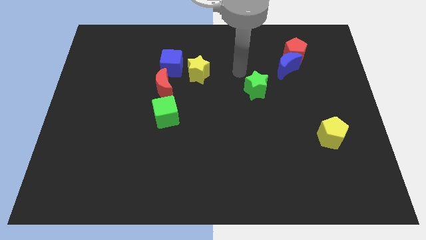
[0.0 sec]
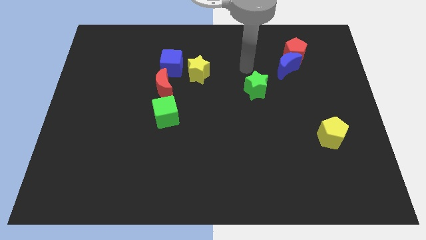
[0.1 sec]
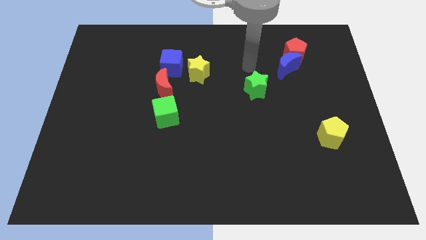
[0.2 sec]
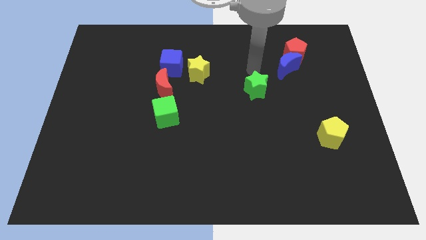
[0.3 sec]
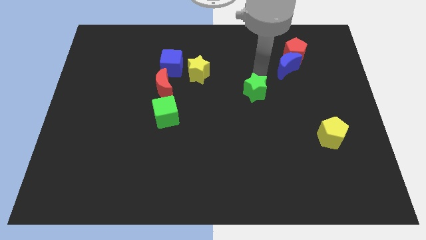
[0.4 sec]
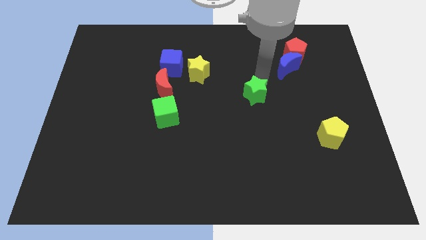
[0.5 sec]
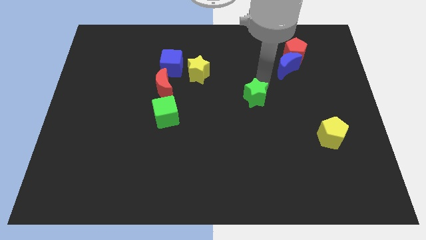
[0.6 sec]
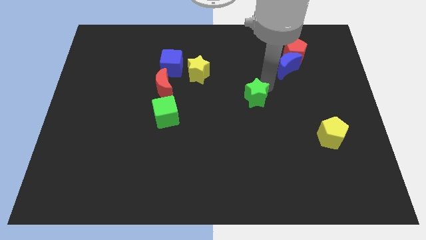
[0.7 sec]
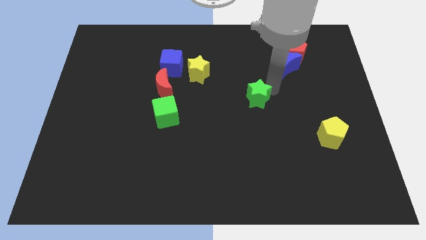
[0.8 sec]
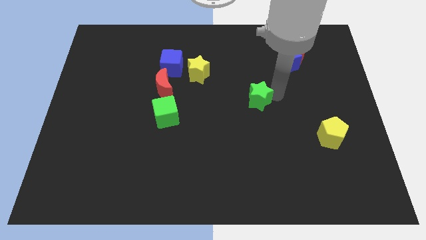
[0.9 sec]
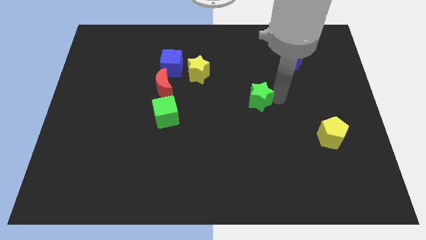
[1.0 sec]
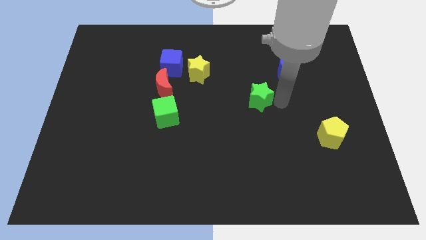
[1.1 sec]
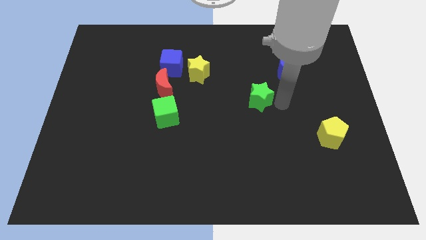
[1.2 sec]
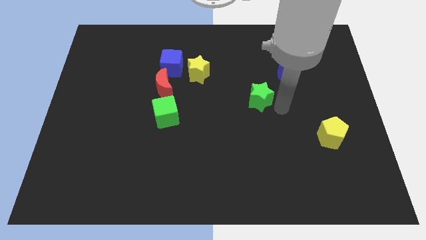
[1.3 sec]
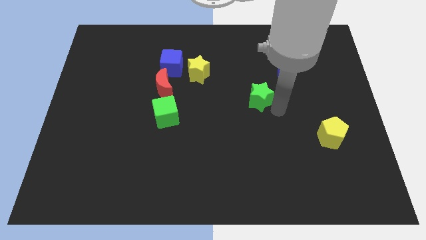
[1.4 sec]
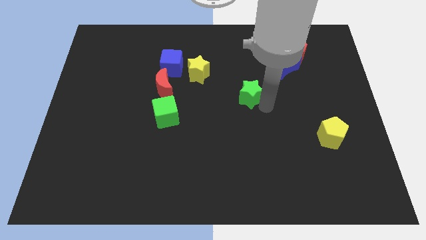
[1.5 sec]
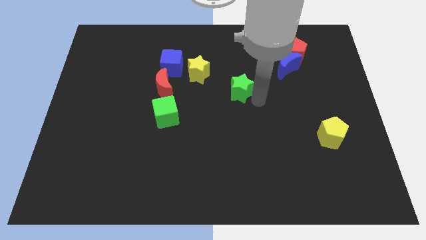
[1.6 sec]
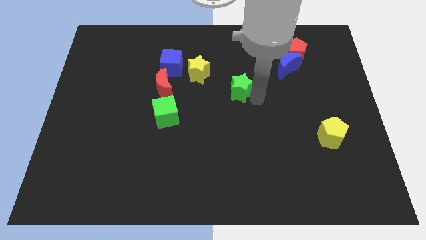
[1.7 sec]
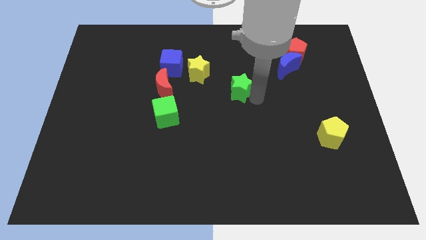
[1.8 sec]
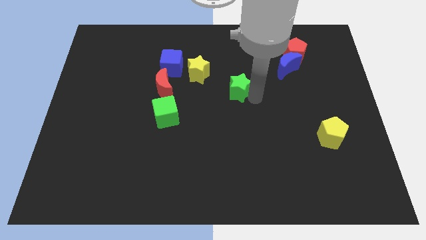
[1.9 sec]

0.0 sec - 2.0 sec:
push the green star towards the left side of the board

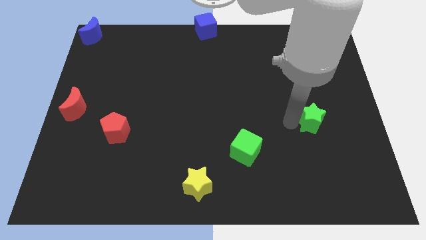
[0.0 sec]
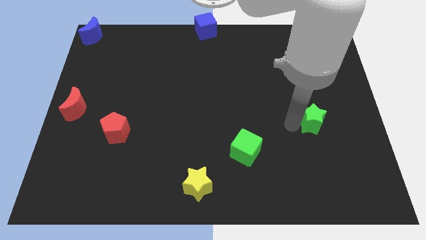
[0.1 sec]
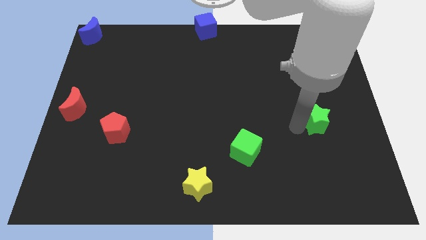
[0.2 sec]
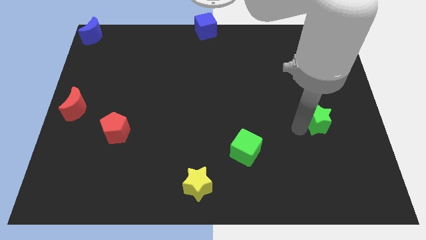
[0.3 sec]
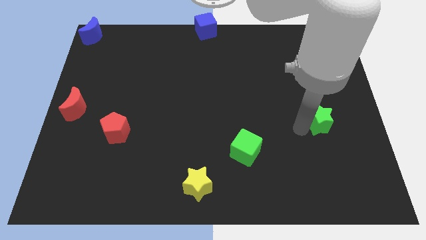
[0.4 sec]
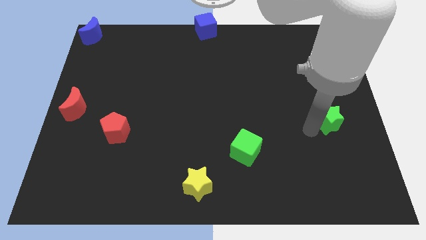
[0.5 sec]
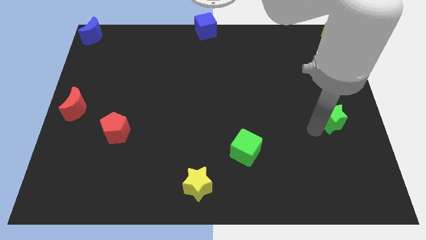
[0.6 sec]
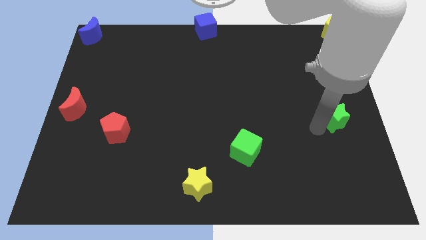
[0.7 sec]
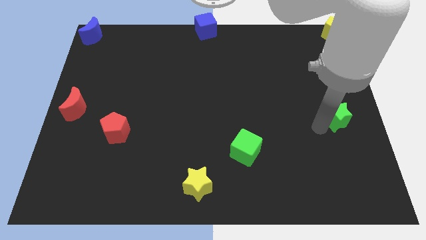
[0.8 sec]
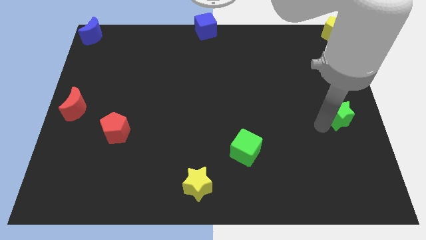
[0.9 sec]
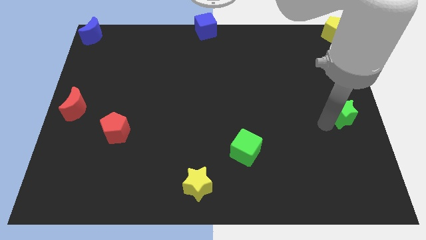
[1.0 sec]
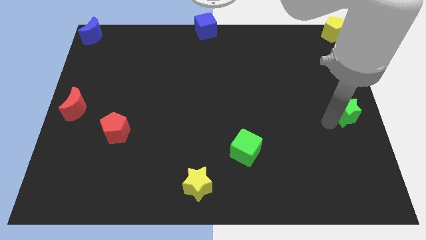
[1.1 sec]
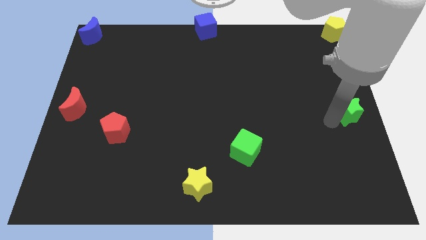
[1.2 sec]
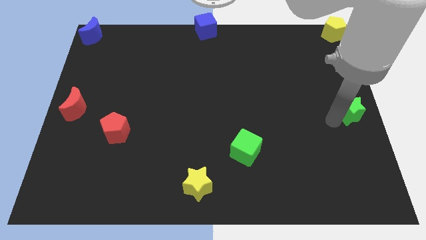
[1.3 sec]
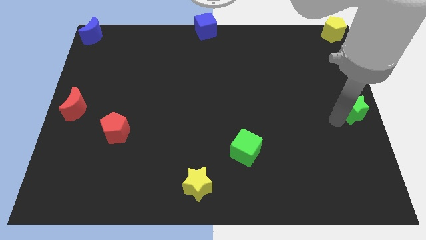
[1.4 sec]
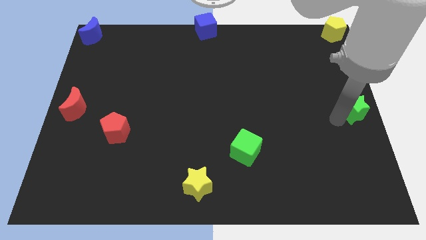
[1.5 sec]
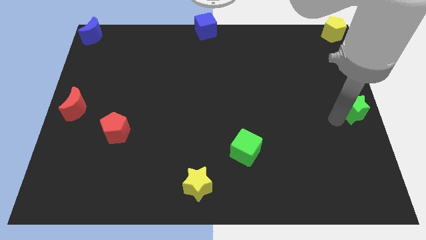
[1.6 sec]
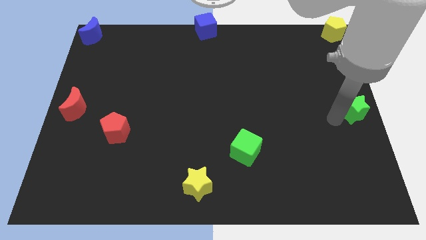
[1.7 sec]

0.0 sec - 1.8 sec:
move the green star to the right center of the board

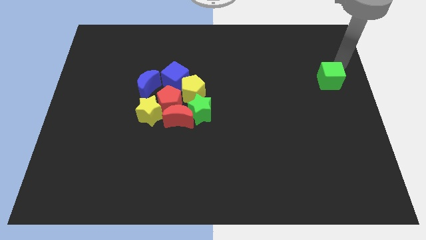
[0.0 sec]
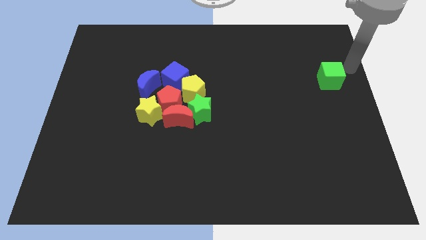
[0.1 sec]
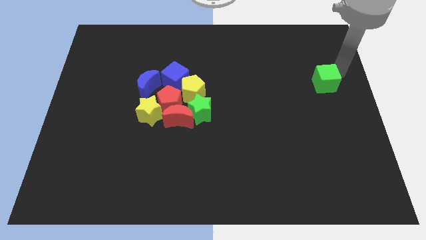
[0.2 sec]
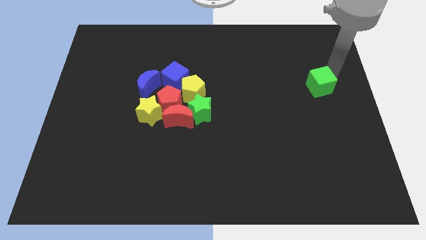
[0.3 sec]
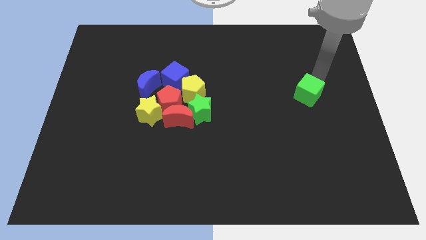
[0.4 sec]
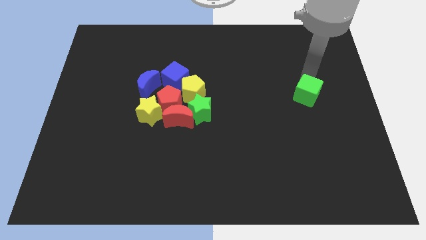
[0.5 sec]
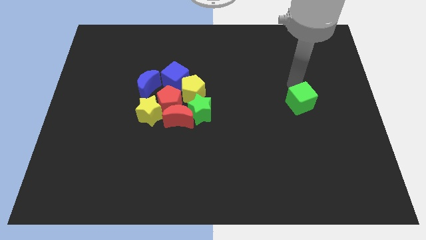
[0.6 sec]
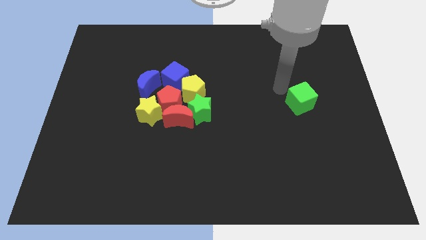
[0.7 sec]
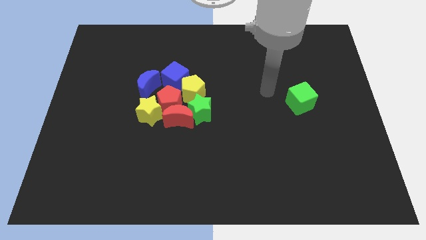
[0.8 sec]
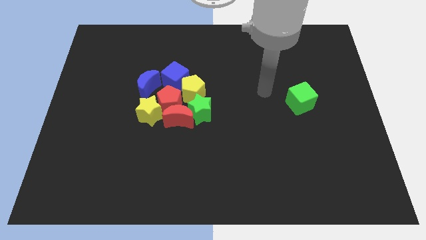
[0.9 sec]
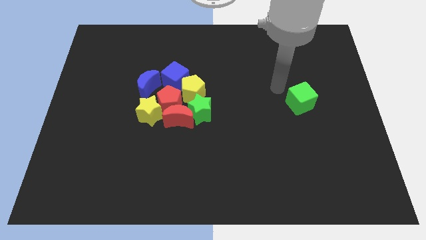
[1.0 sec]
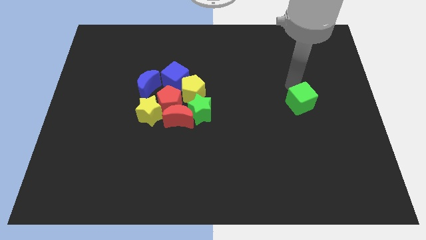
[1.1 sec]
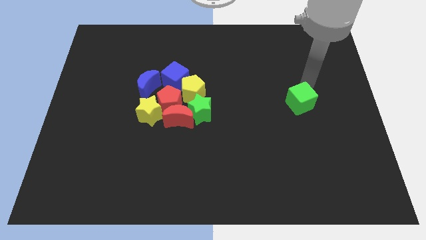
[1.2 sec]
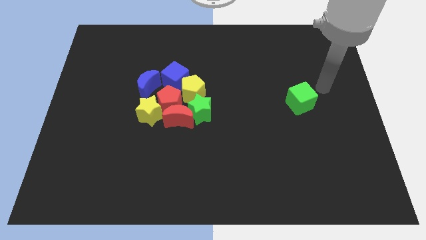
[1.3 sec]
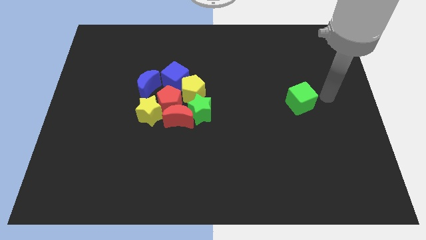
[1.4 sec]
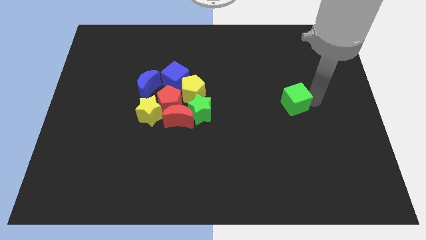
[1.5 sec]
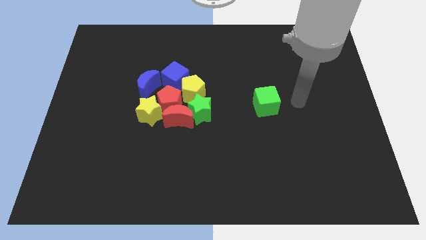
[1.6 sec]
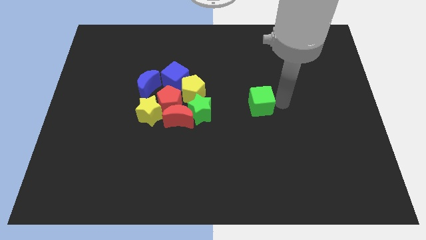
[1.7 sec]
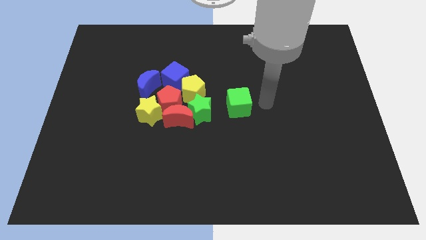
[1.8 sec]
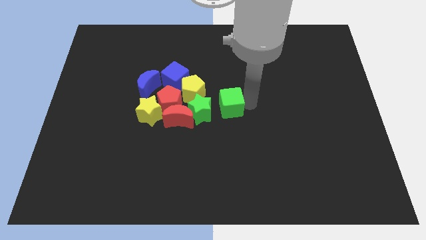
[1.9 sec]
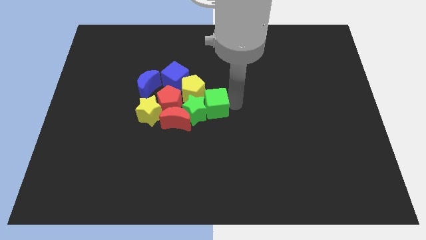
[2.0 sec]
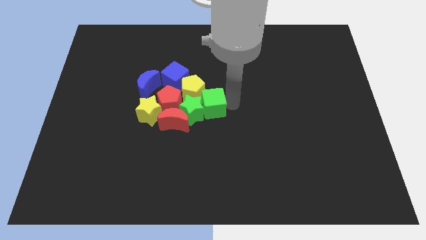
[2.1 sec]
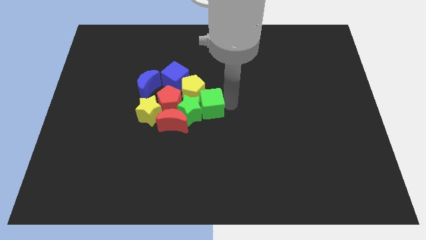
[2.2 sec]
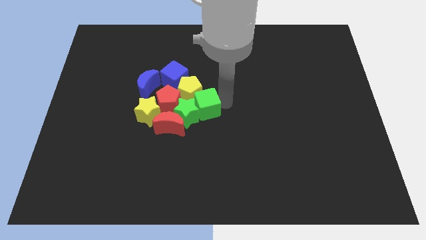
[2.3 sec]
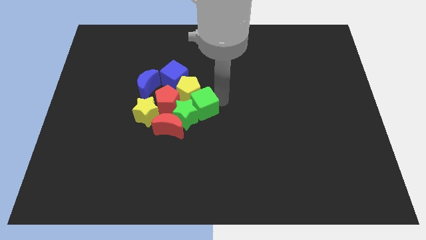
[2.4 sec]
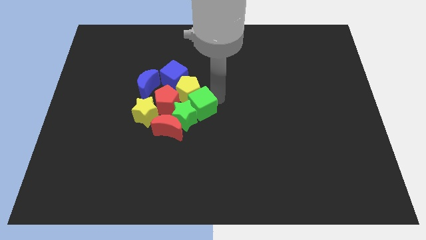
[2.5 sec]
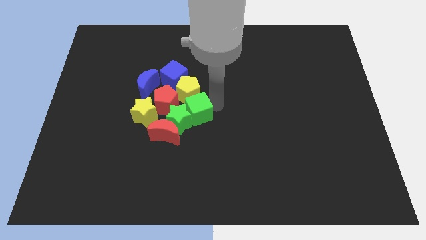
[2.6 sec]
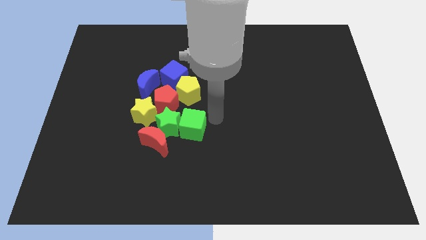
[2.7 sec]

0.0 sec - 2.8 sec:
drag the green cube close to the green star

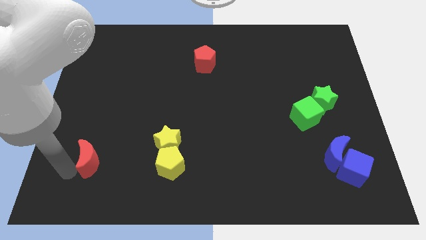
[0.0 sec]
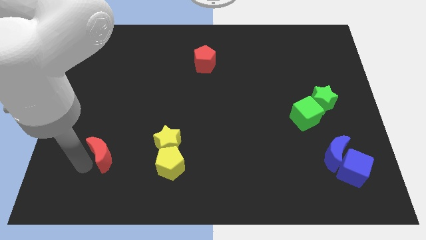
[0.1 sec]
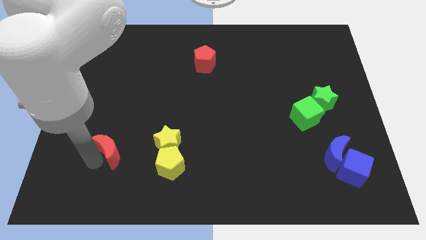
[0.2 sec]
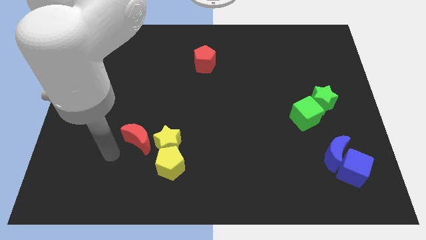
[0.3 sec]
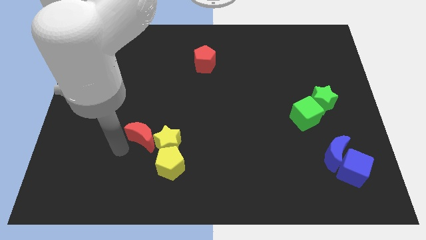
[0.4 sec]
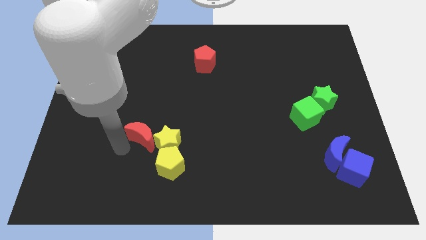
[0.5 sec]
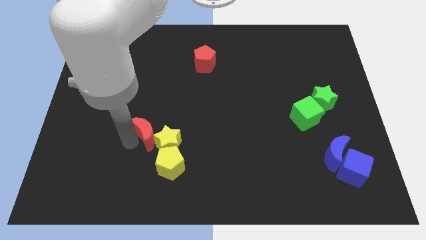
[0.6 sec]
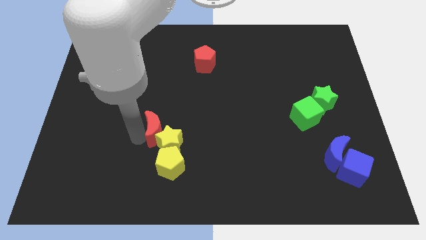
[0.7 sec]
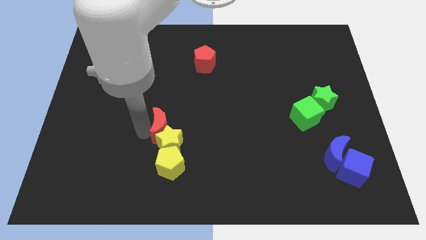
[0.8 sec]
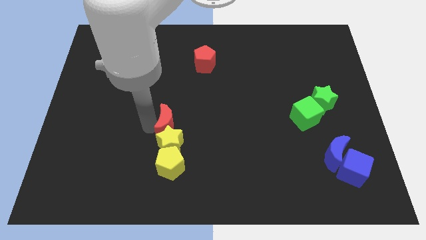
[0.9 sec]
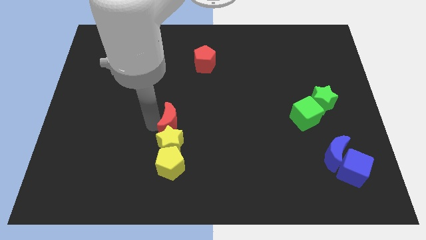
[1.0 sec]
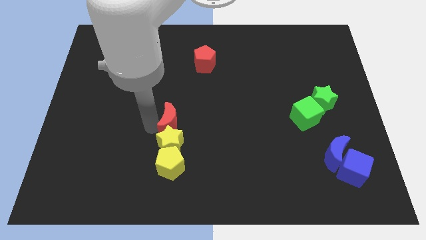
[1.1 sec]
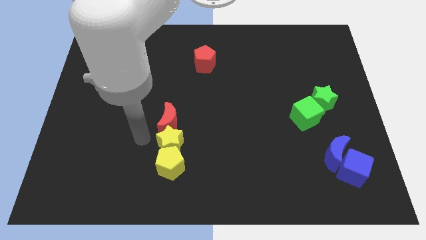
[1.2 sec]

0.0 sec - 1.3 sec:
put the red moon at the top of the yellow star

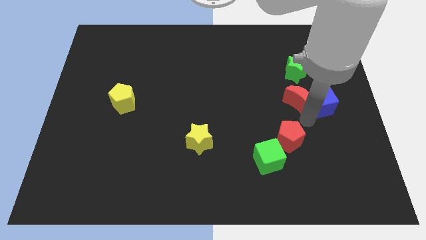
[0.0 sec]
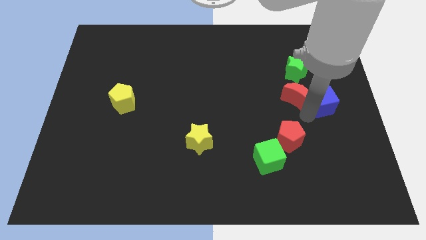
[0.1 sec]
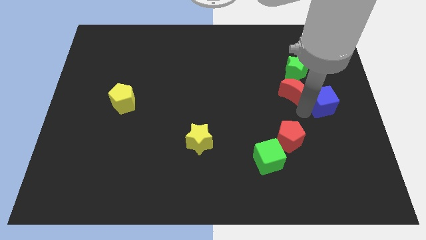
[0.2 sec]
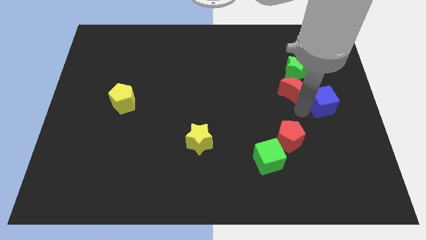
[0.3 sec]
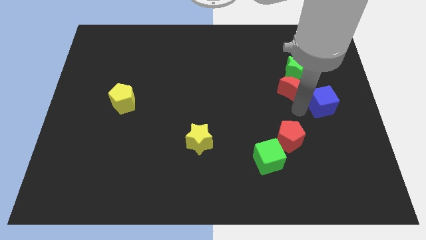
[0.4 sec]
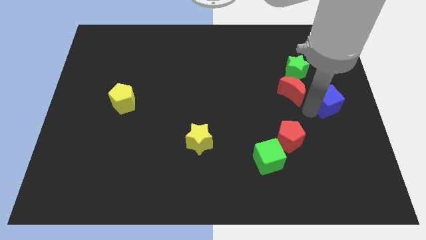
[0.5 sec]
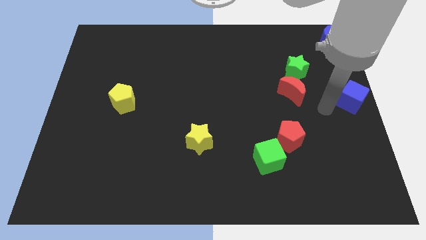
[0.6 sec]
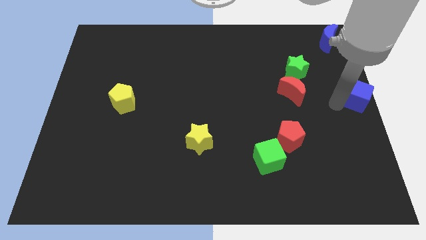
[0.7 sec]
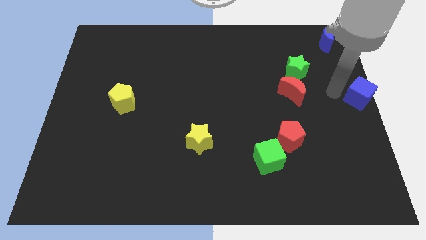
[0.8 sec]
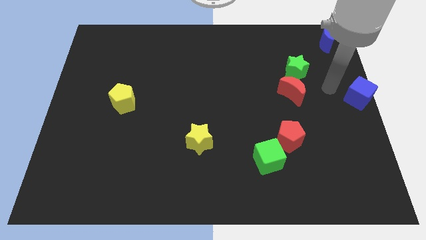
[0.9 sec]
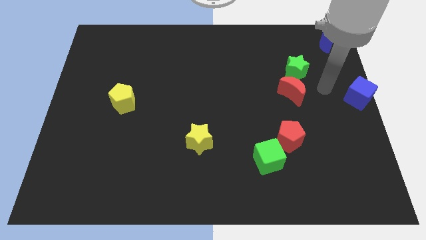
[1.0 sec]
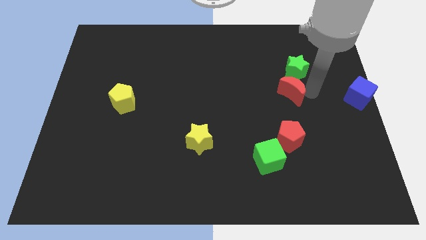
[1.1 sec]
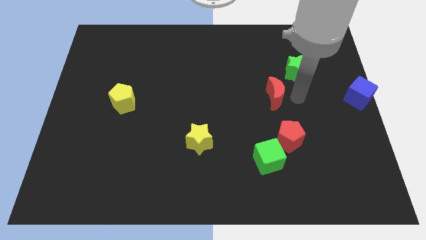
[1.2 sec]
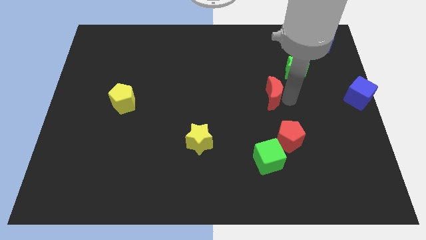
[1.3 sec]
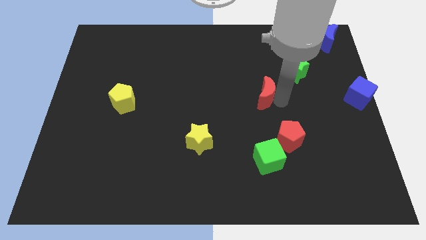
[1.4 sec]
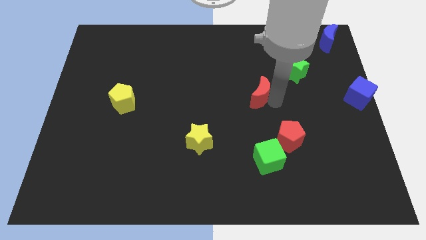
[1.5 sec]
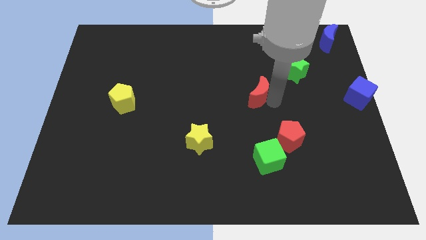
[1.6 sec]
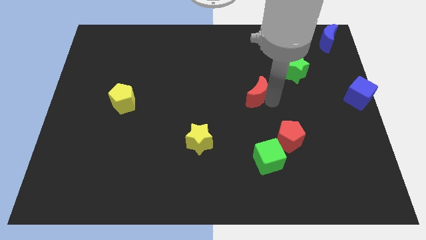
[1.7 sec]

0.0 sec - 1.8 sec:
separate the red crescent and the blue cube
